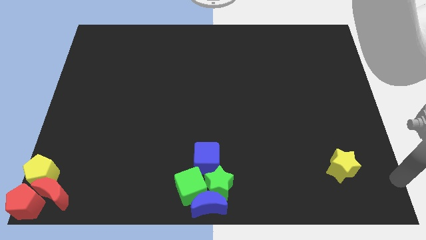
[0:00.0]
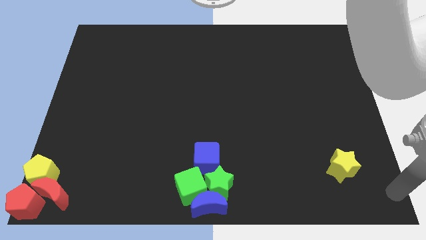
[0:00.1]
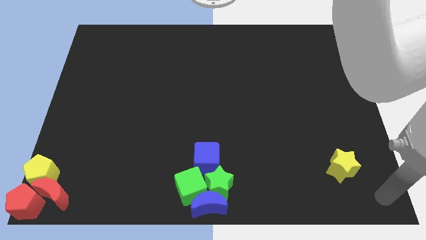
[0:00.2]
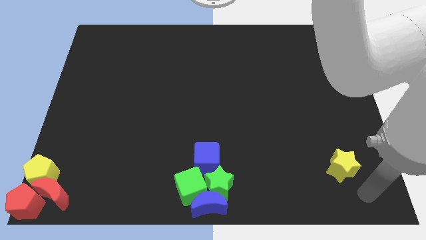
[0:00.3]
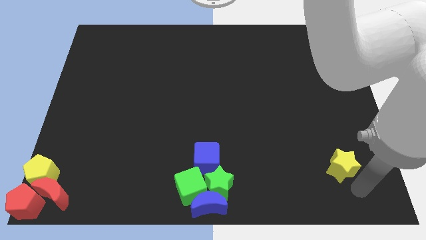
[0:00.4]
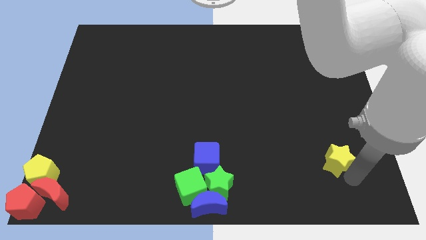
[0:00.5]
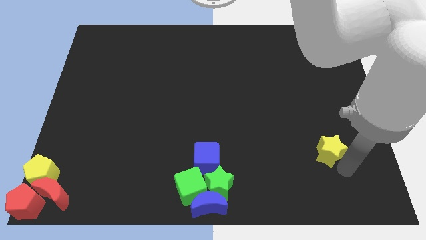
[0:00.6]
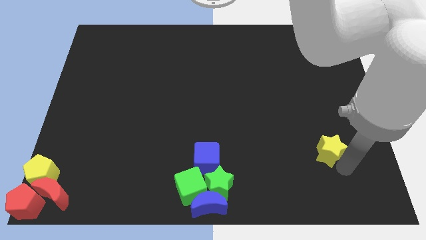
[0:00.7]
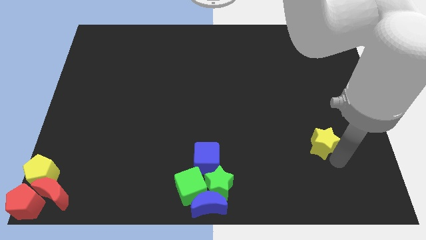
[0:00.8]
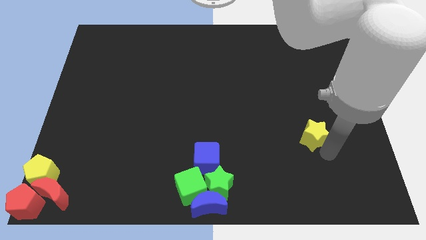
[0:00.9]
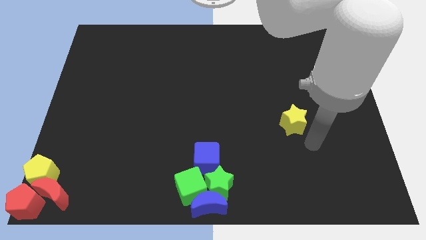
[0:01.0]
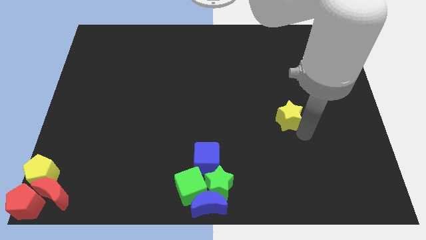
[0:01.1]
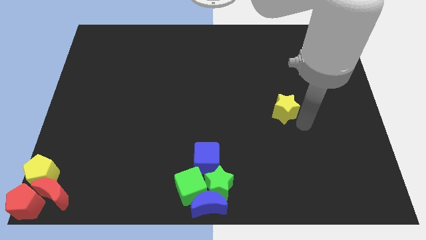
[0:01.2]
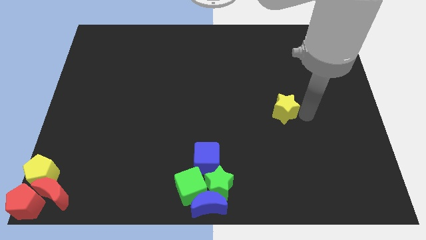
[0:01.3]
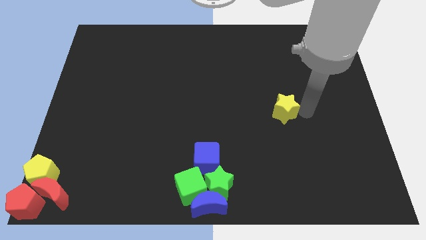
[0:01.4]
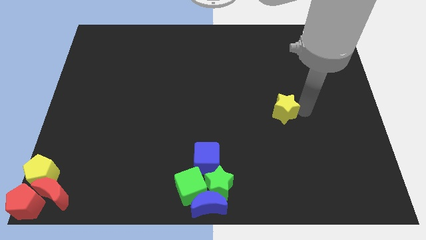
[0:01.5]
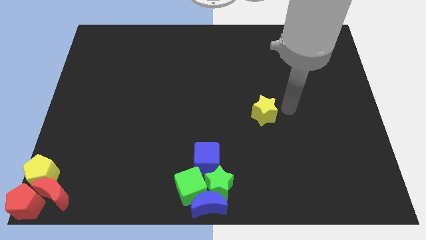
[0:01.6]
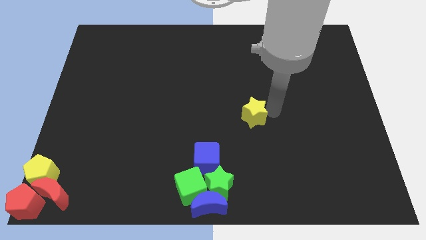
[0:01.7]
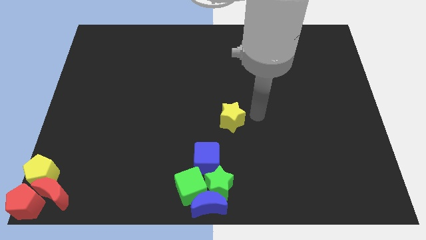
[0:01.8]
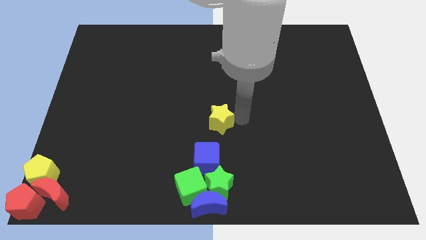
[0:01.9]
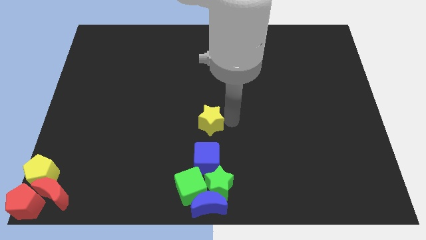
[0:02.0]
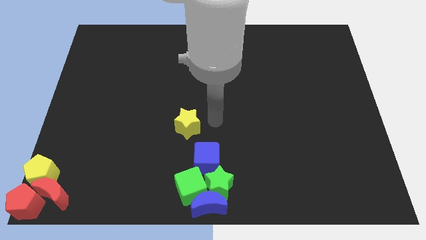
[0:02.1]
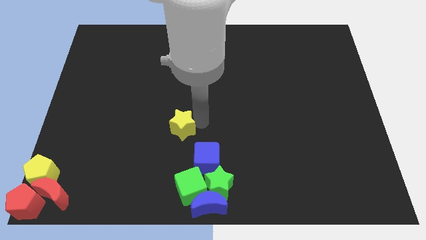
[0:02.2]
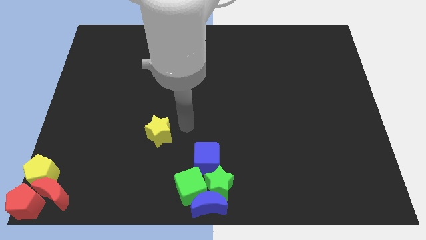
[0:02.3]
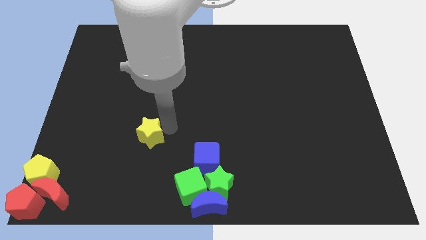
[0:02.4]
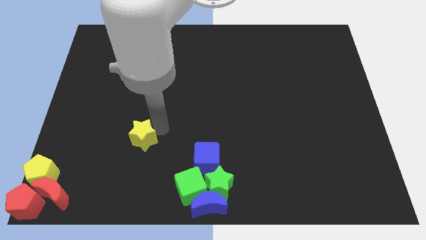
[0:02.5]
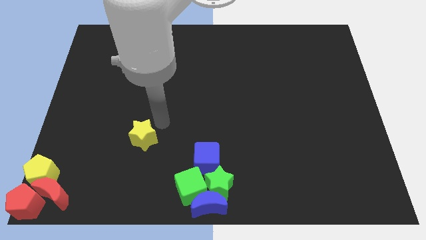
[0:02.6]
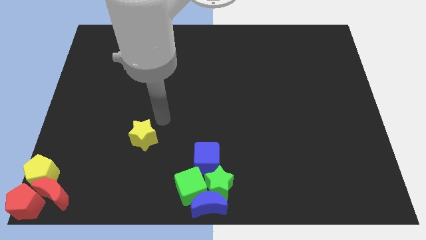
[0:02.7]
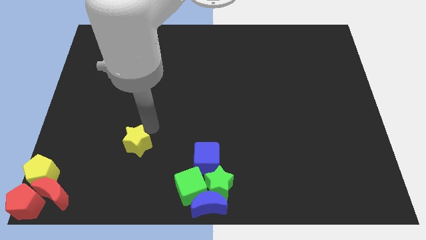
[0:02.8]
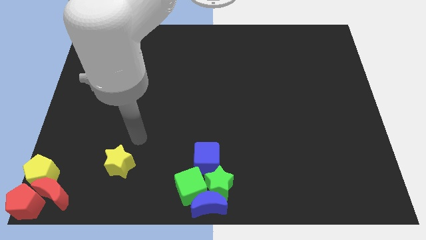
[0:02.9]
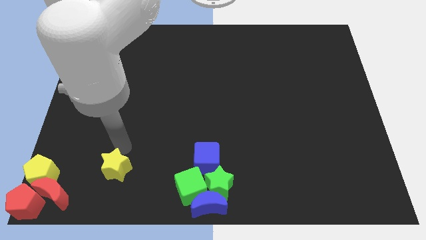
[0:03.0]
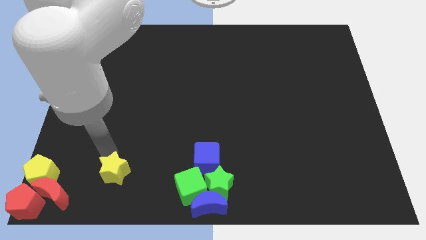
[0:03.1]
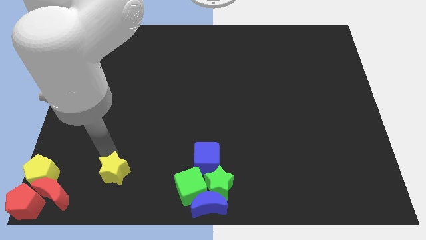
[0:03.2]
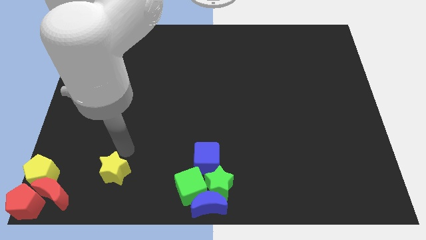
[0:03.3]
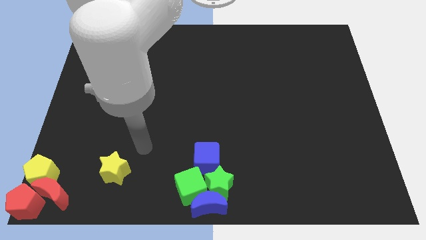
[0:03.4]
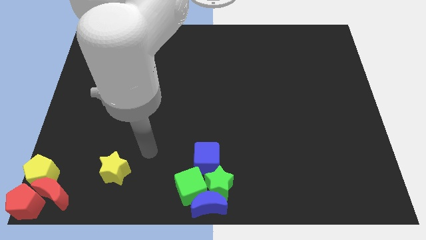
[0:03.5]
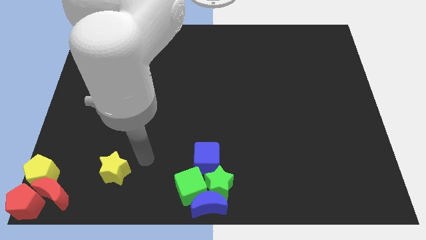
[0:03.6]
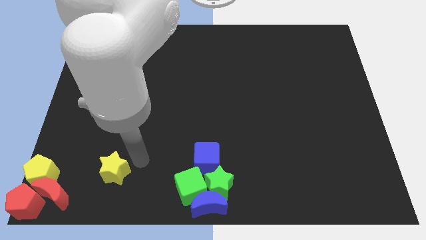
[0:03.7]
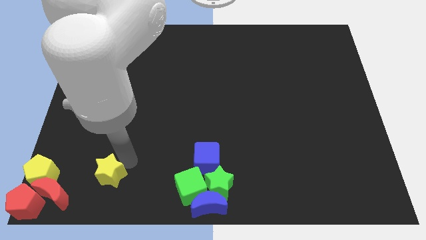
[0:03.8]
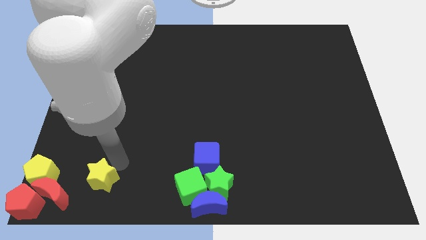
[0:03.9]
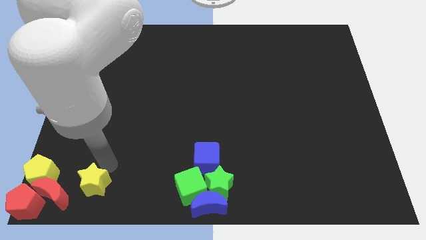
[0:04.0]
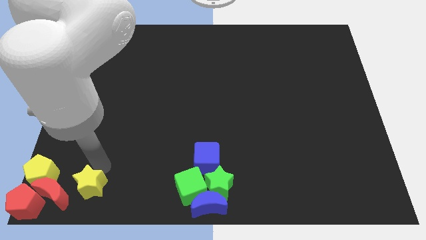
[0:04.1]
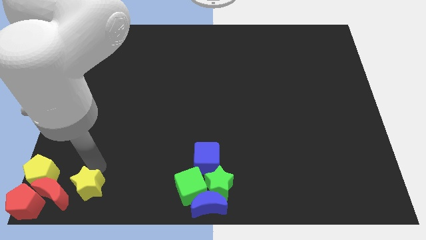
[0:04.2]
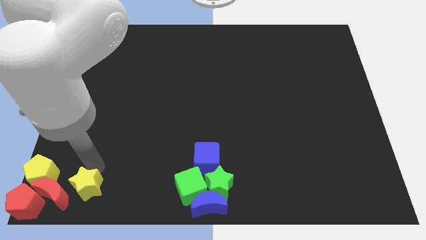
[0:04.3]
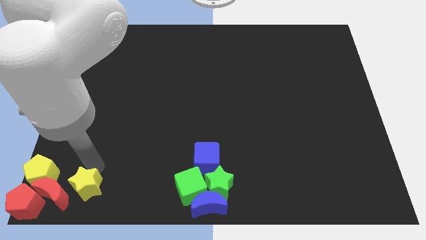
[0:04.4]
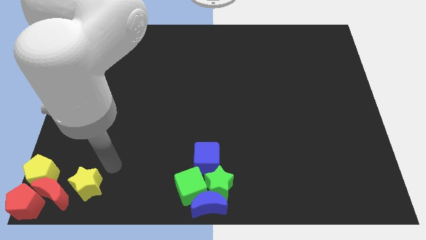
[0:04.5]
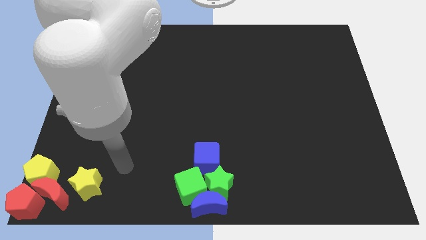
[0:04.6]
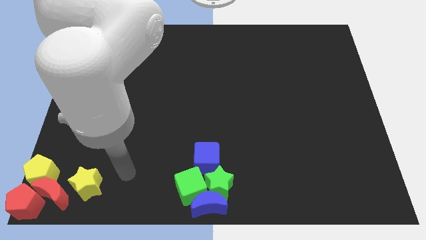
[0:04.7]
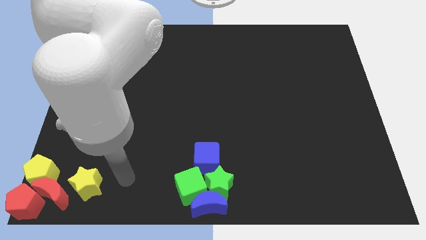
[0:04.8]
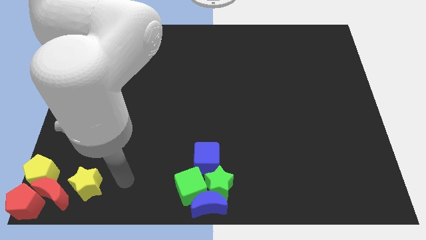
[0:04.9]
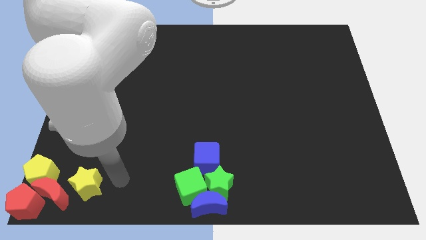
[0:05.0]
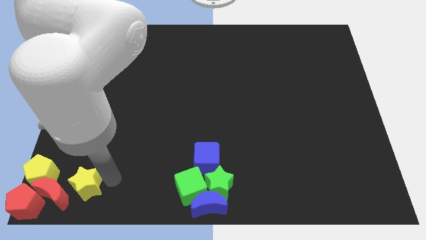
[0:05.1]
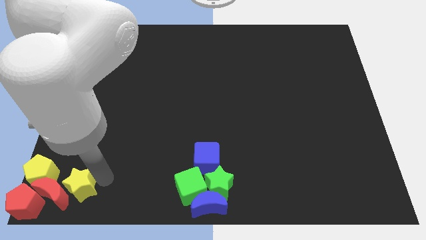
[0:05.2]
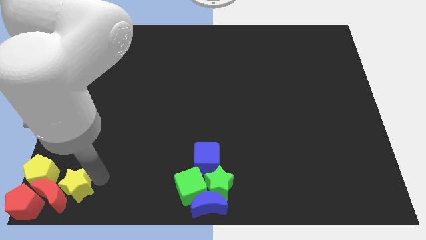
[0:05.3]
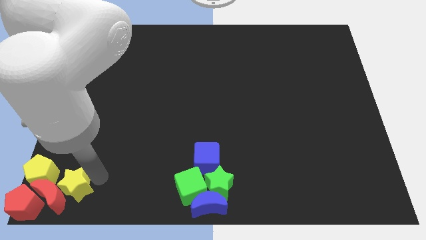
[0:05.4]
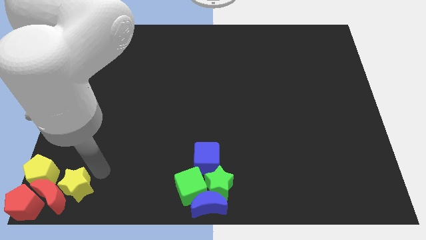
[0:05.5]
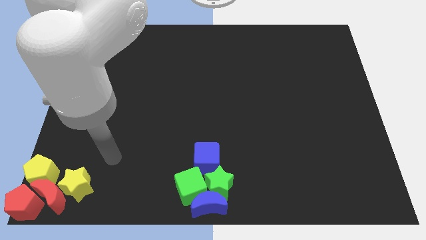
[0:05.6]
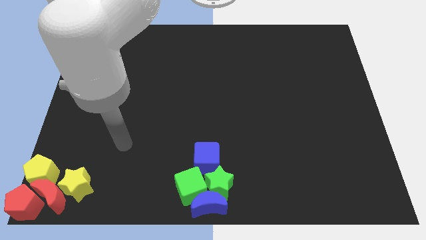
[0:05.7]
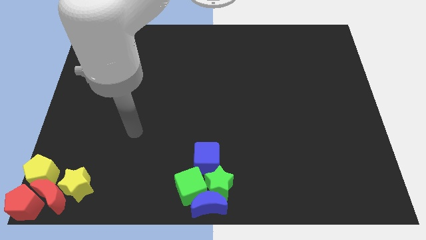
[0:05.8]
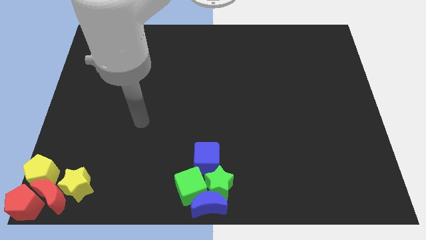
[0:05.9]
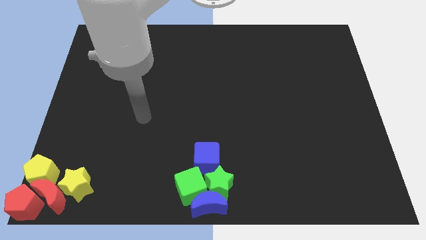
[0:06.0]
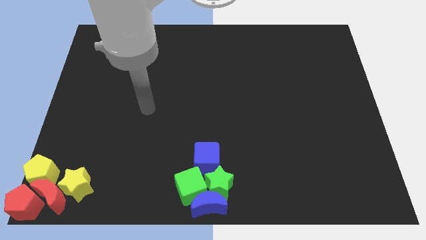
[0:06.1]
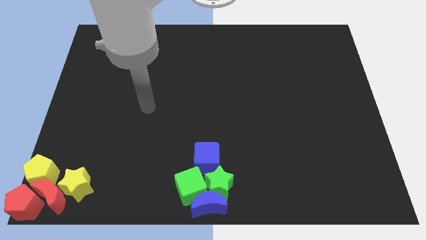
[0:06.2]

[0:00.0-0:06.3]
place the yellow star towards the right side of the red crescent

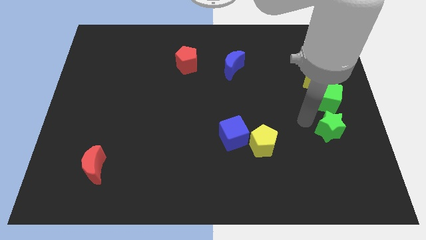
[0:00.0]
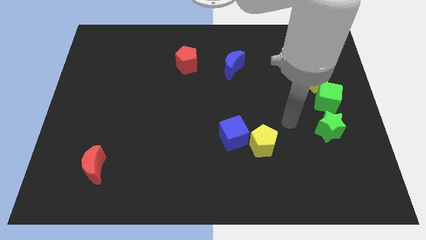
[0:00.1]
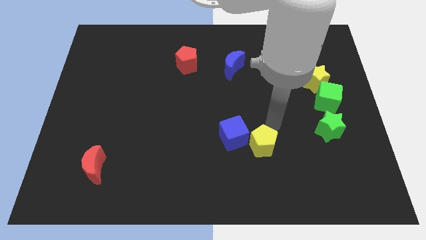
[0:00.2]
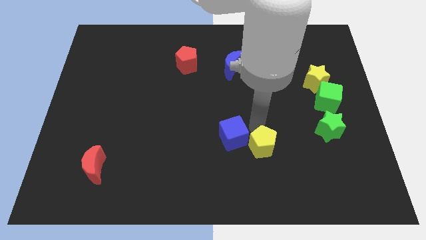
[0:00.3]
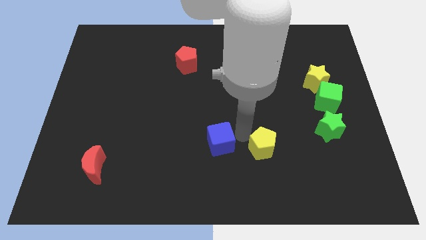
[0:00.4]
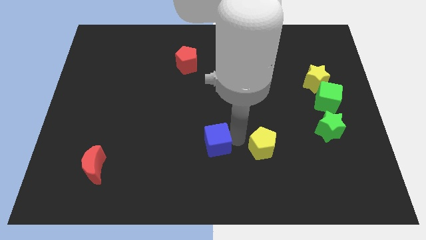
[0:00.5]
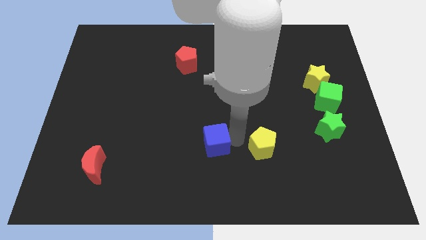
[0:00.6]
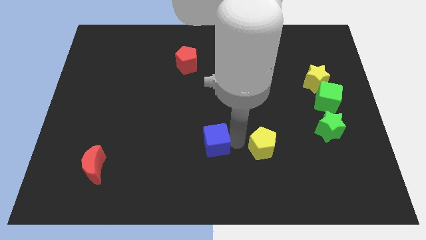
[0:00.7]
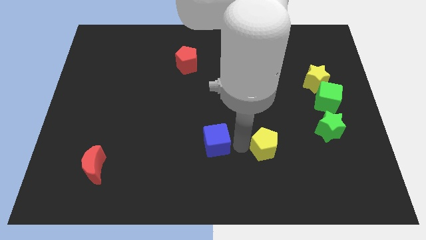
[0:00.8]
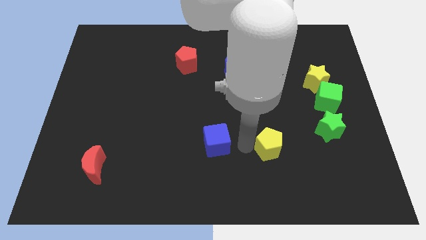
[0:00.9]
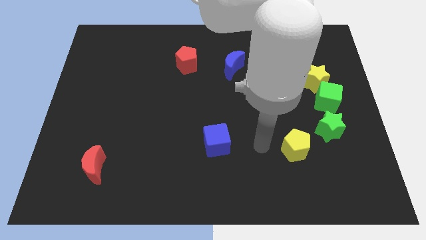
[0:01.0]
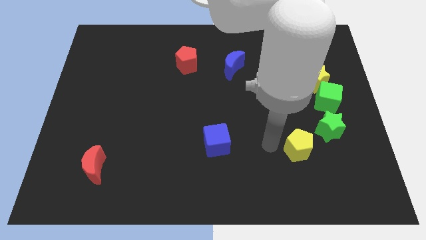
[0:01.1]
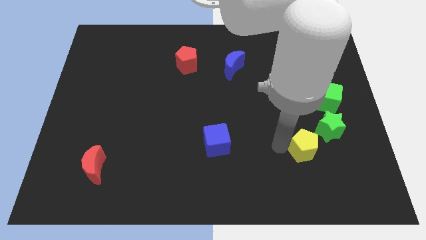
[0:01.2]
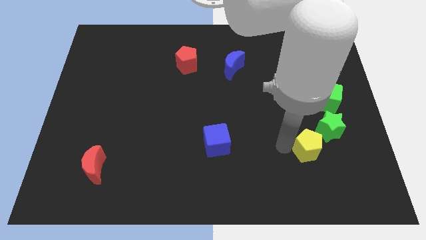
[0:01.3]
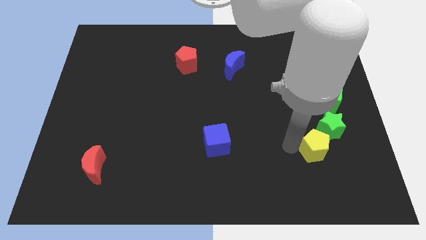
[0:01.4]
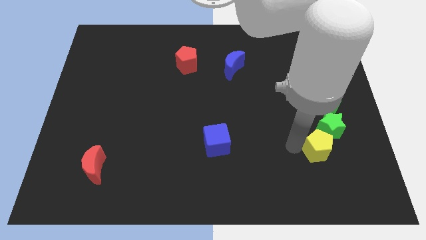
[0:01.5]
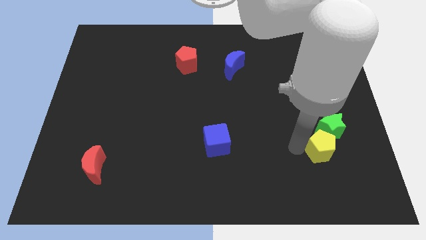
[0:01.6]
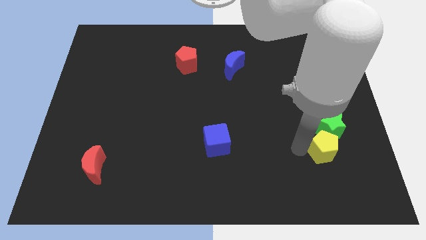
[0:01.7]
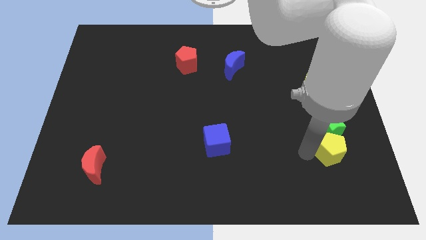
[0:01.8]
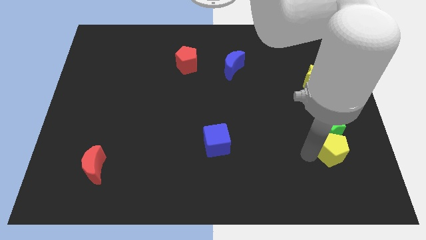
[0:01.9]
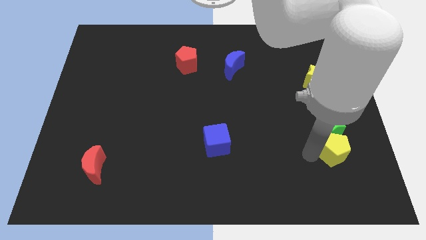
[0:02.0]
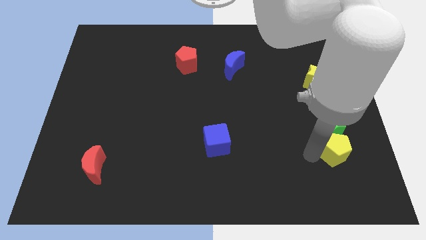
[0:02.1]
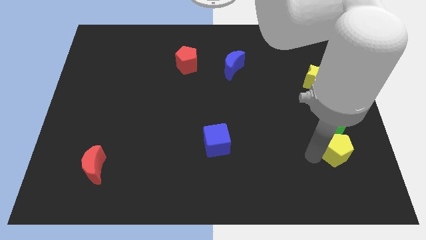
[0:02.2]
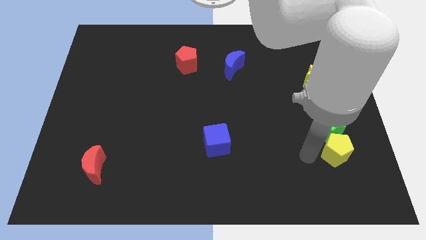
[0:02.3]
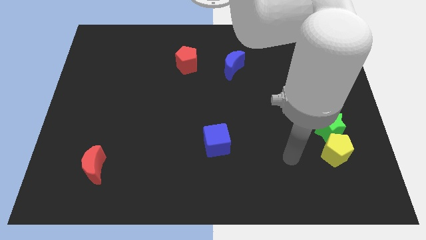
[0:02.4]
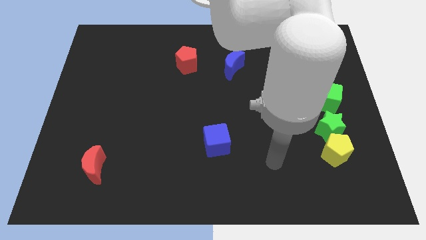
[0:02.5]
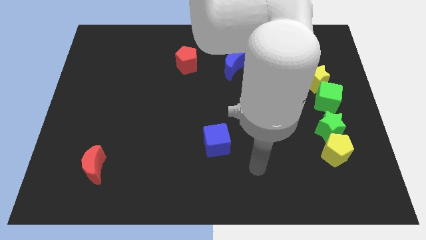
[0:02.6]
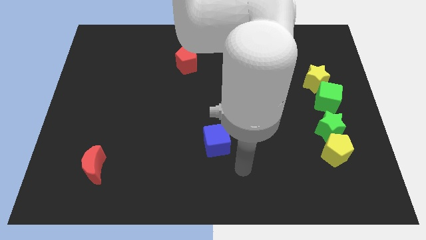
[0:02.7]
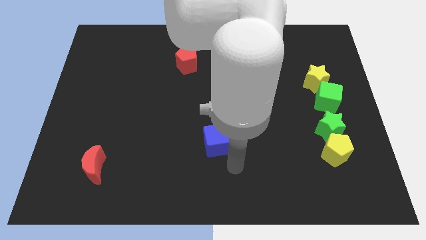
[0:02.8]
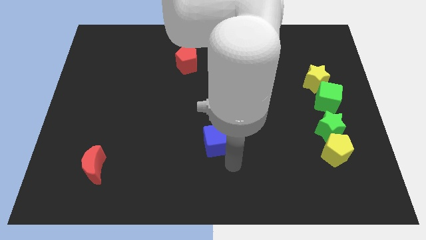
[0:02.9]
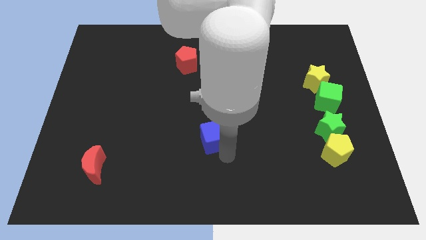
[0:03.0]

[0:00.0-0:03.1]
separate yellow pentagon and the blue cube
